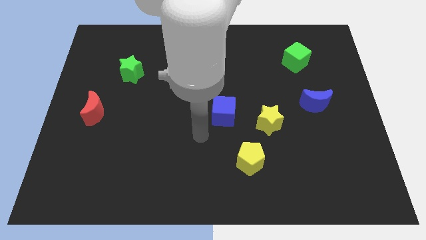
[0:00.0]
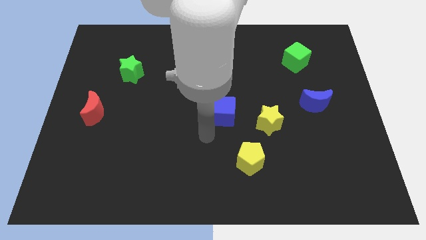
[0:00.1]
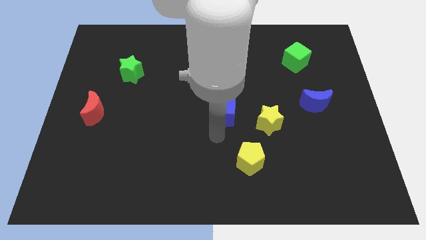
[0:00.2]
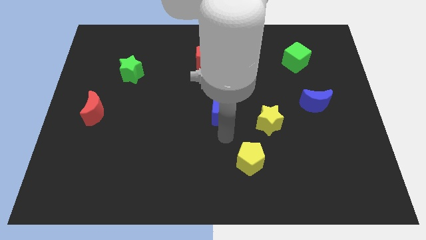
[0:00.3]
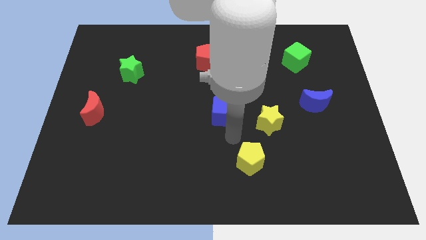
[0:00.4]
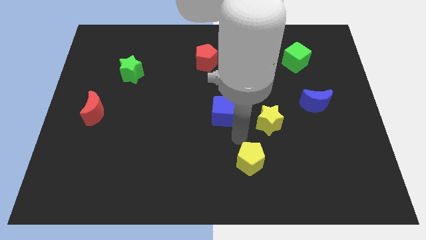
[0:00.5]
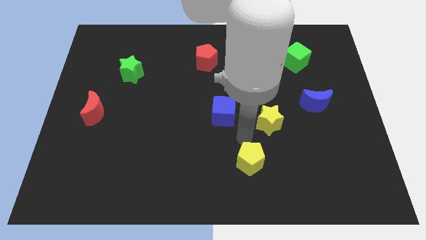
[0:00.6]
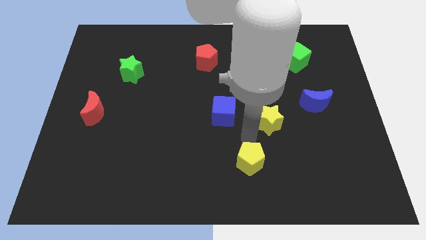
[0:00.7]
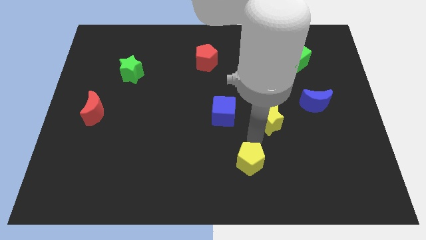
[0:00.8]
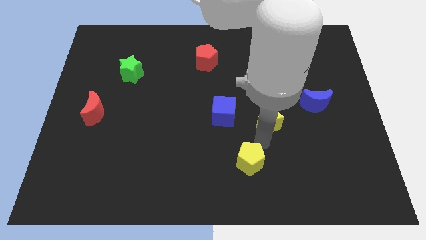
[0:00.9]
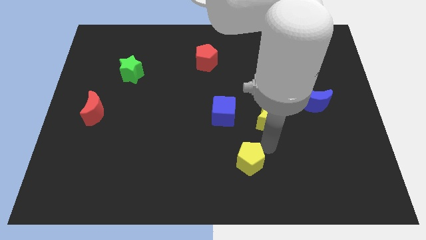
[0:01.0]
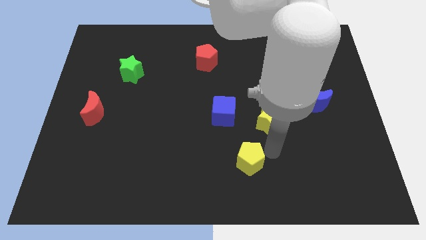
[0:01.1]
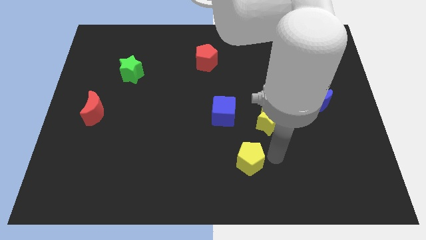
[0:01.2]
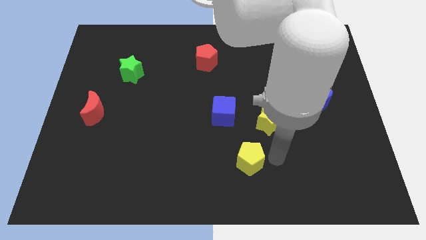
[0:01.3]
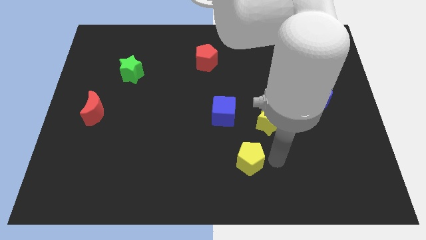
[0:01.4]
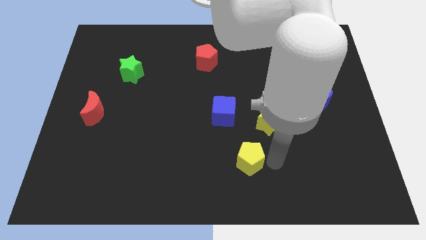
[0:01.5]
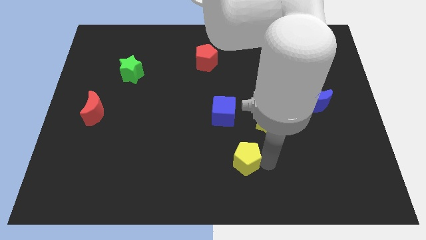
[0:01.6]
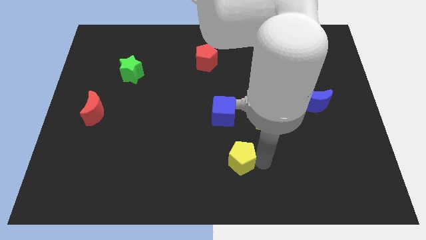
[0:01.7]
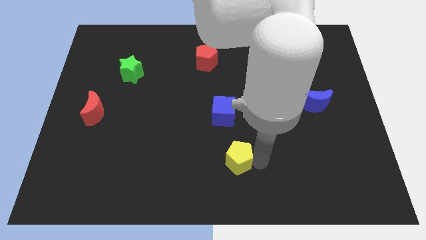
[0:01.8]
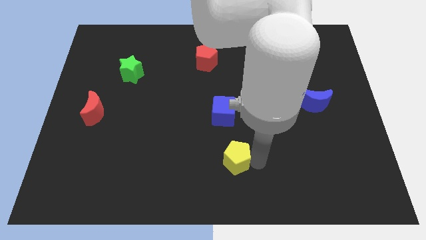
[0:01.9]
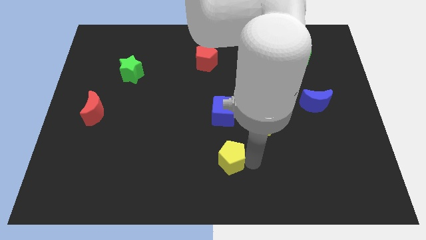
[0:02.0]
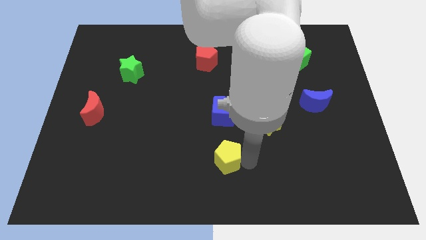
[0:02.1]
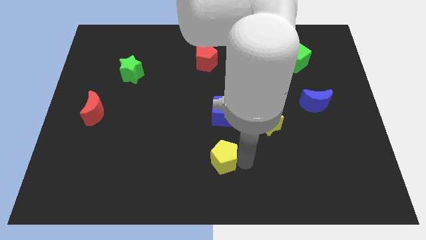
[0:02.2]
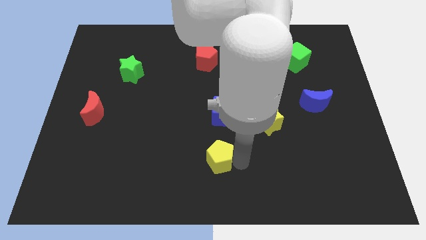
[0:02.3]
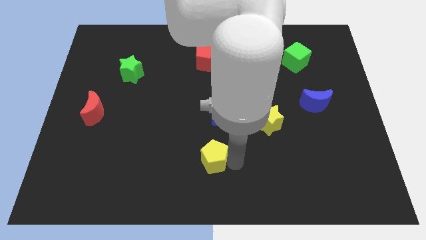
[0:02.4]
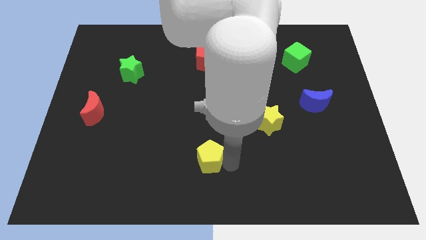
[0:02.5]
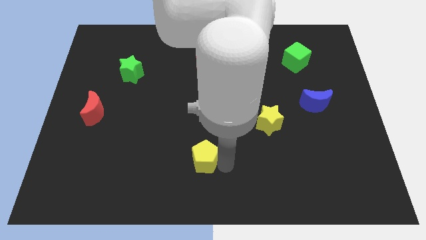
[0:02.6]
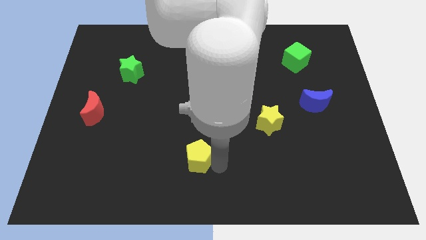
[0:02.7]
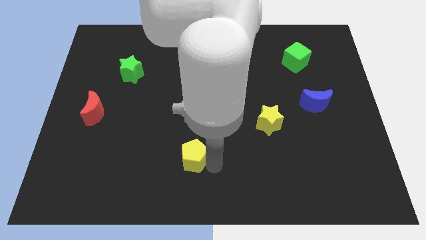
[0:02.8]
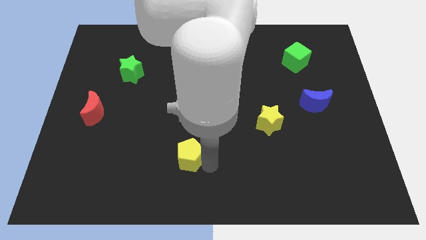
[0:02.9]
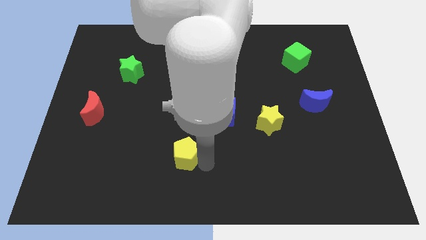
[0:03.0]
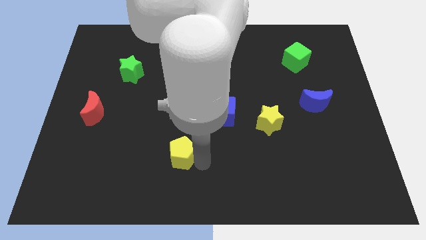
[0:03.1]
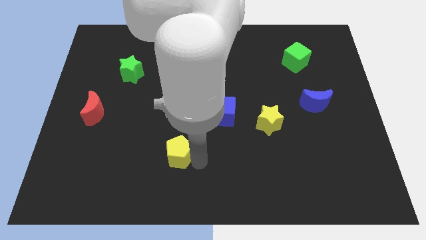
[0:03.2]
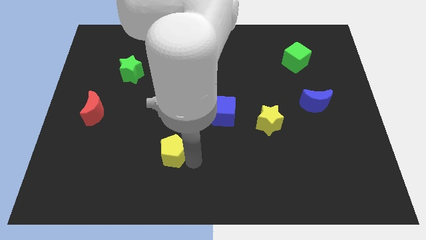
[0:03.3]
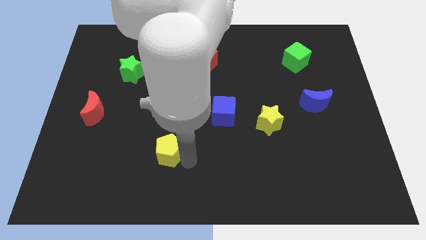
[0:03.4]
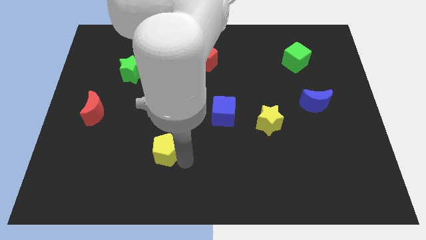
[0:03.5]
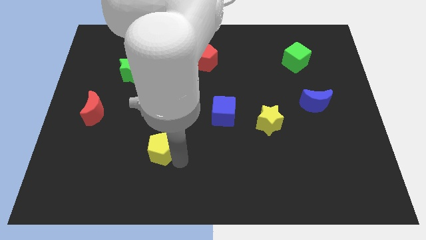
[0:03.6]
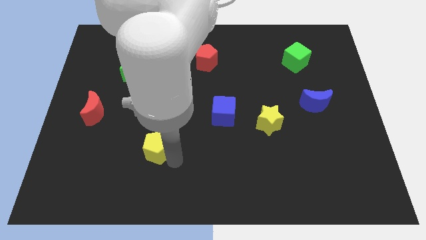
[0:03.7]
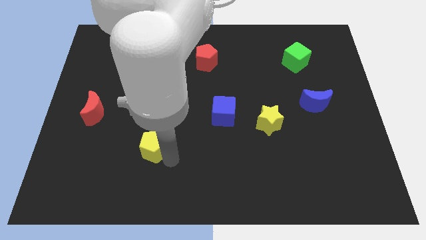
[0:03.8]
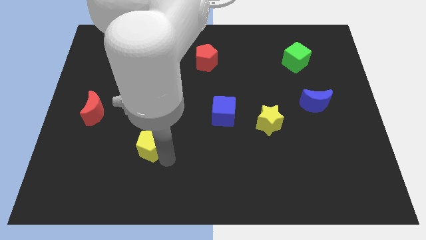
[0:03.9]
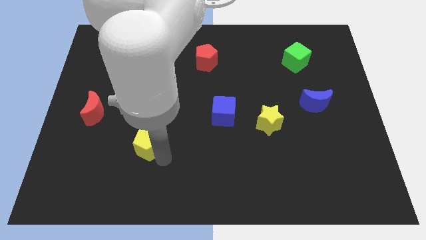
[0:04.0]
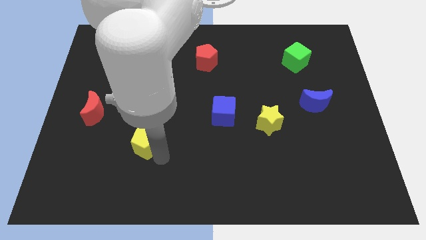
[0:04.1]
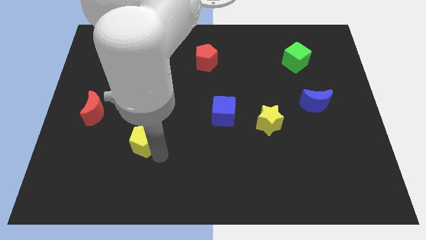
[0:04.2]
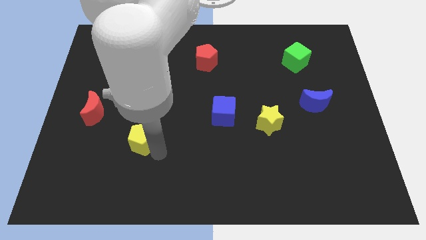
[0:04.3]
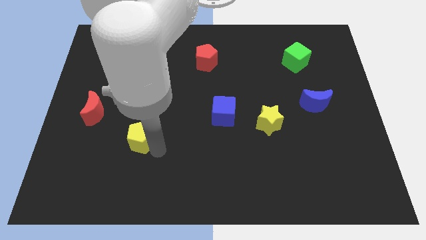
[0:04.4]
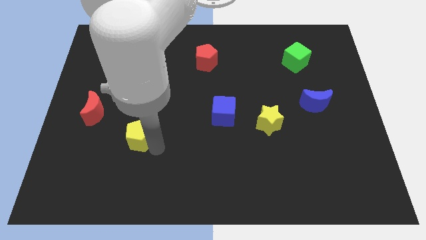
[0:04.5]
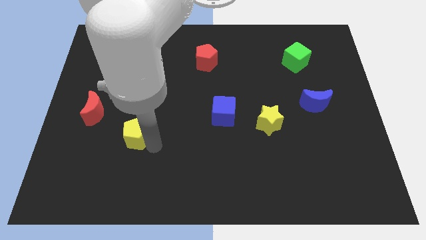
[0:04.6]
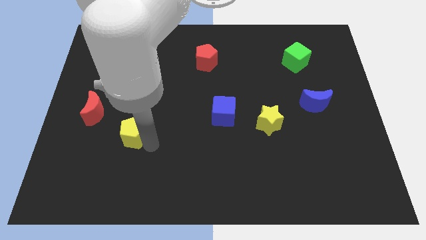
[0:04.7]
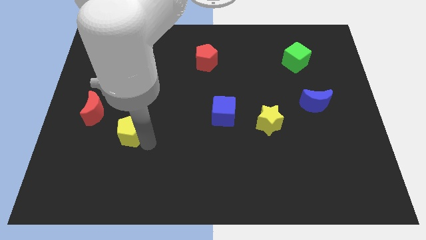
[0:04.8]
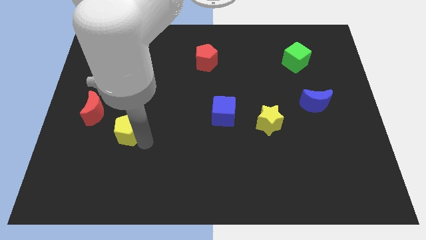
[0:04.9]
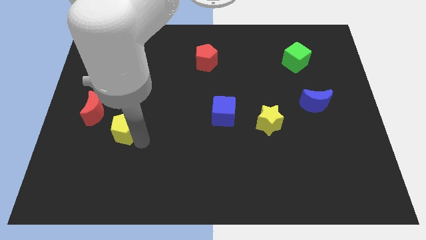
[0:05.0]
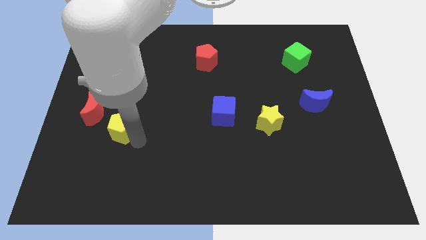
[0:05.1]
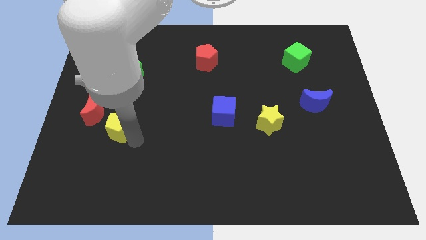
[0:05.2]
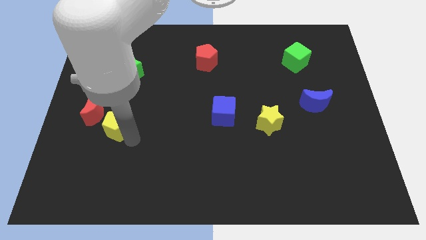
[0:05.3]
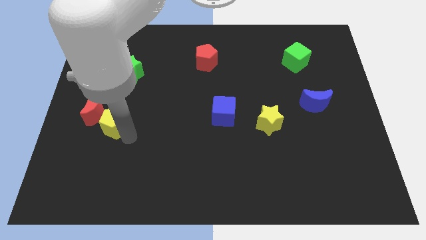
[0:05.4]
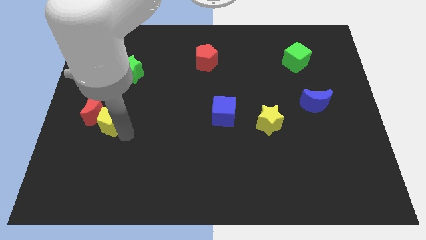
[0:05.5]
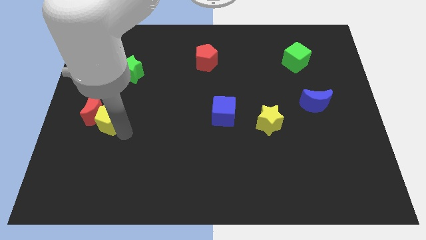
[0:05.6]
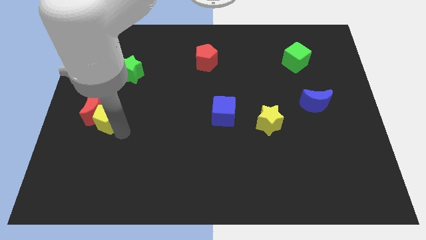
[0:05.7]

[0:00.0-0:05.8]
push the yellow pentagon next to the red moon

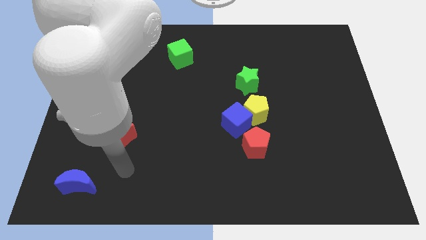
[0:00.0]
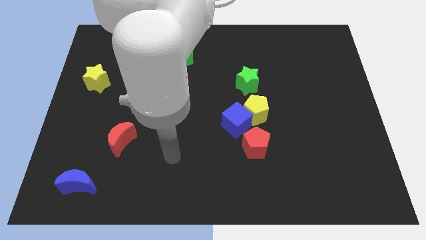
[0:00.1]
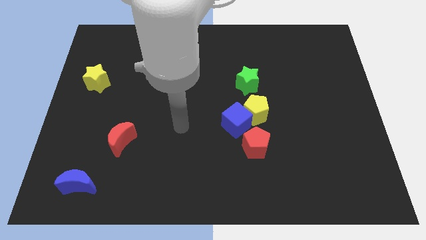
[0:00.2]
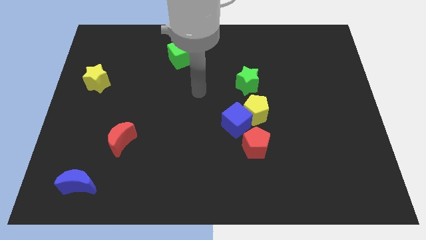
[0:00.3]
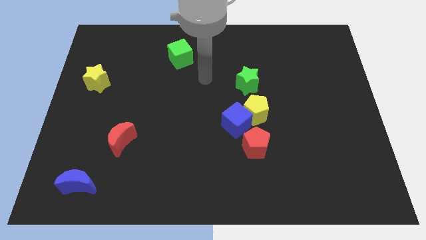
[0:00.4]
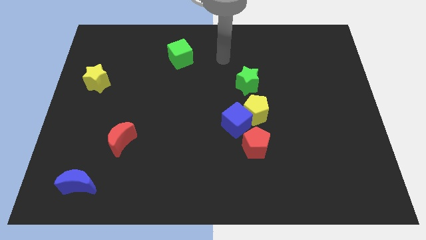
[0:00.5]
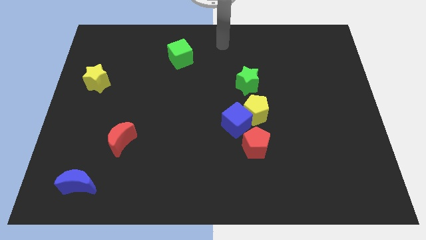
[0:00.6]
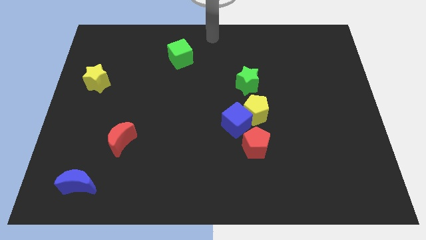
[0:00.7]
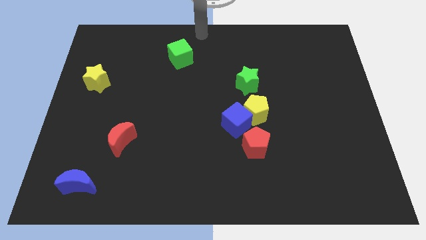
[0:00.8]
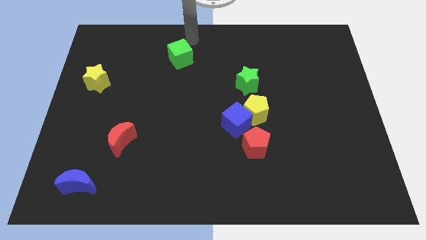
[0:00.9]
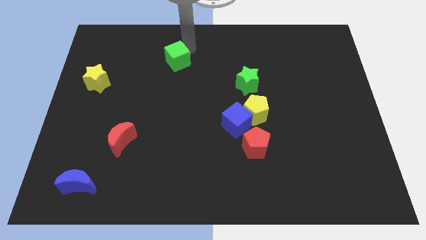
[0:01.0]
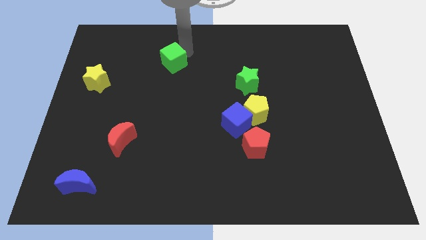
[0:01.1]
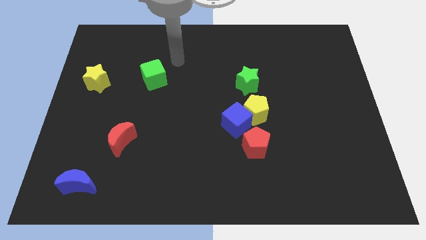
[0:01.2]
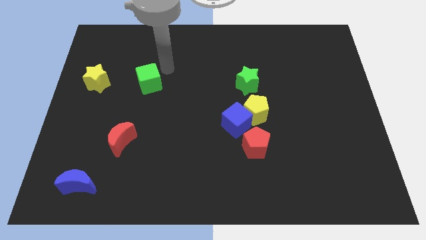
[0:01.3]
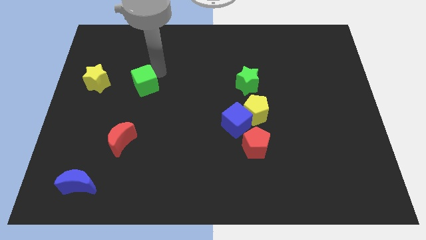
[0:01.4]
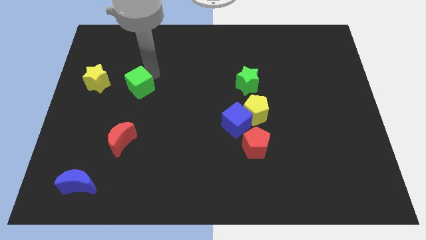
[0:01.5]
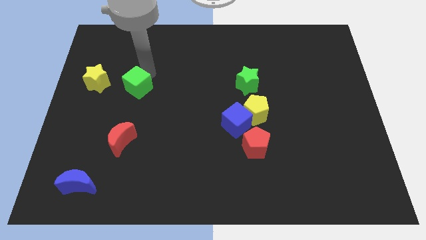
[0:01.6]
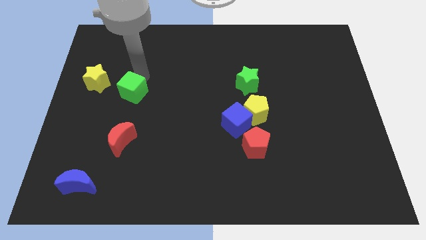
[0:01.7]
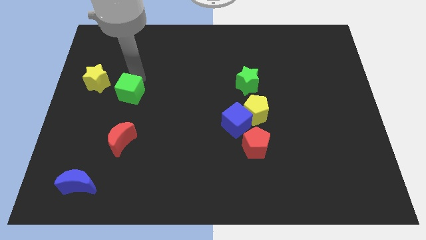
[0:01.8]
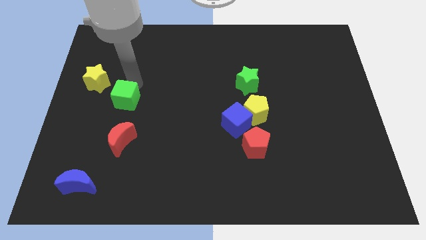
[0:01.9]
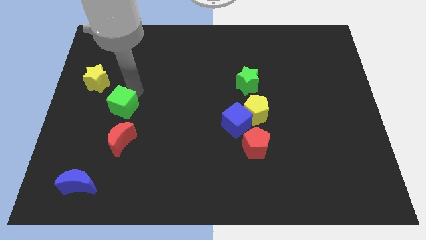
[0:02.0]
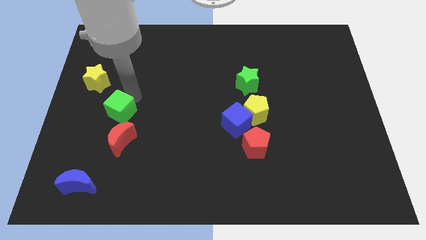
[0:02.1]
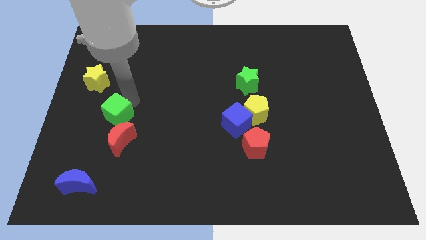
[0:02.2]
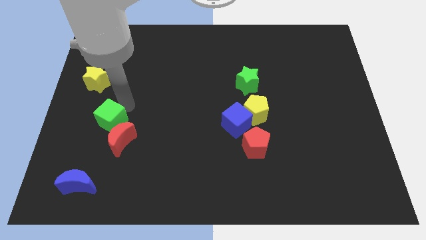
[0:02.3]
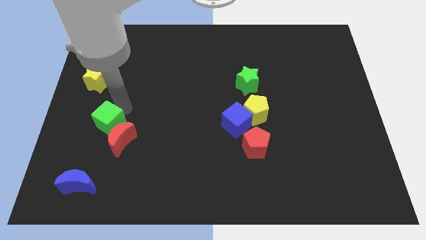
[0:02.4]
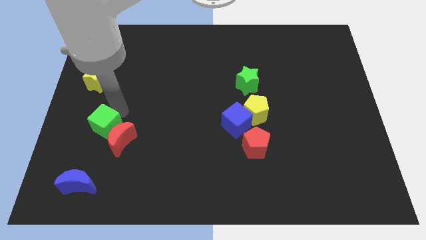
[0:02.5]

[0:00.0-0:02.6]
slide the green cube next to the red moon

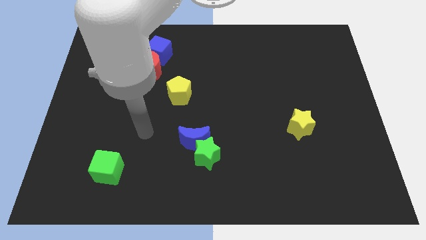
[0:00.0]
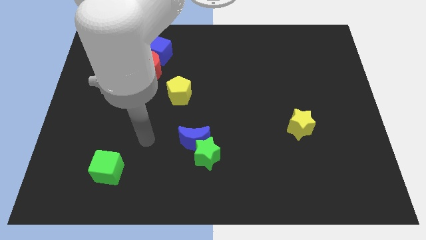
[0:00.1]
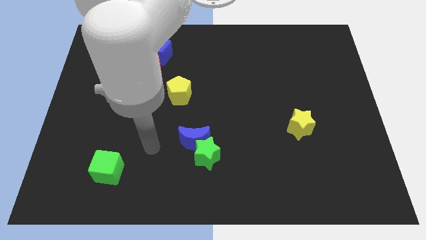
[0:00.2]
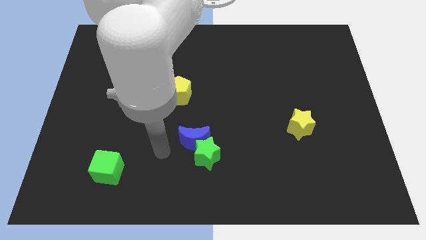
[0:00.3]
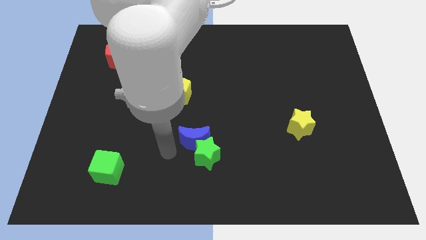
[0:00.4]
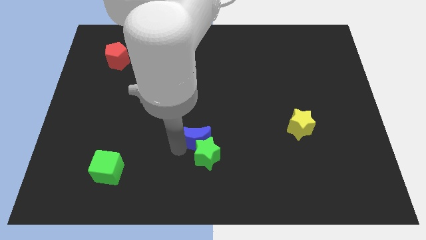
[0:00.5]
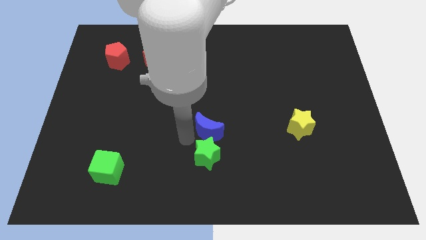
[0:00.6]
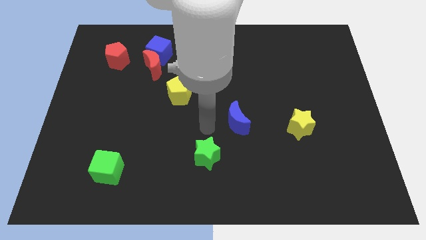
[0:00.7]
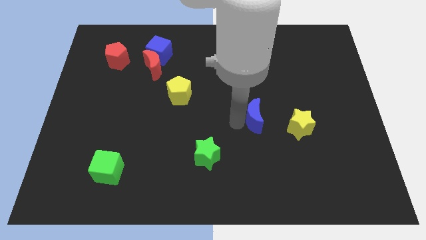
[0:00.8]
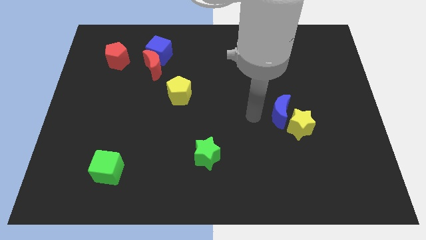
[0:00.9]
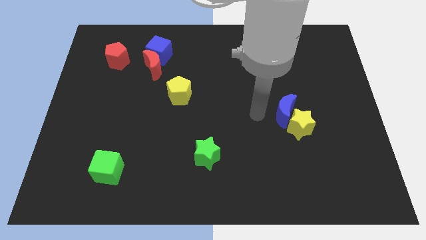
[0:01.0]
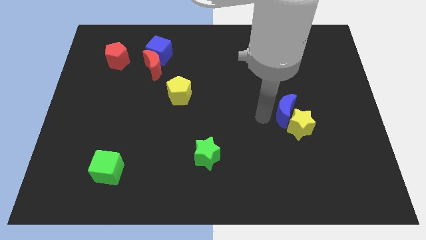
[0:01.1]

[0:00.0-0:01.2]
move the blue moon to the yellow star
